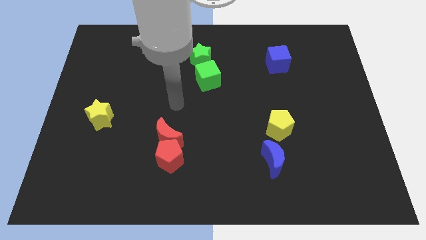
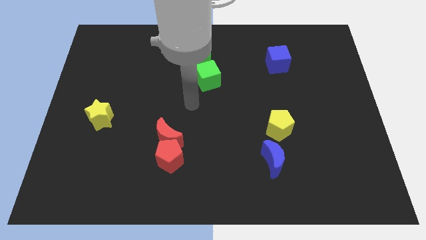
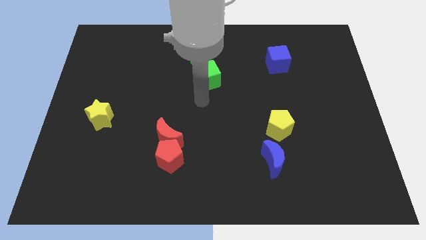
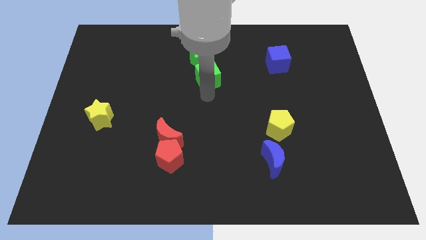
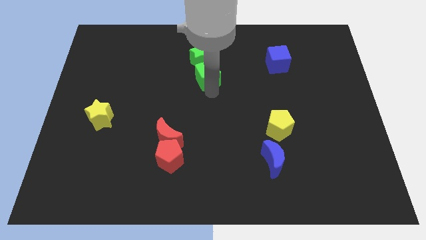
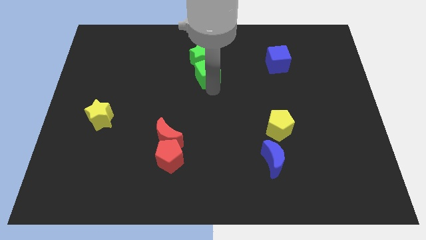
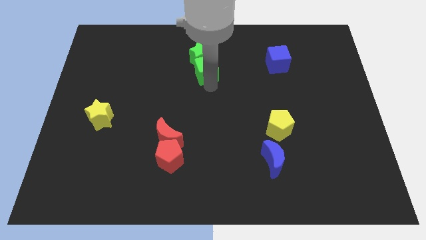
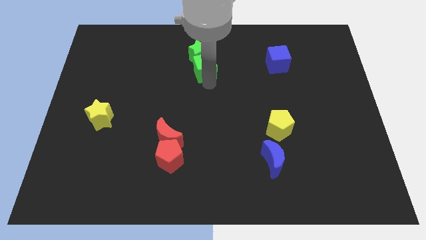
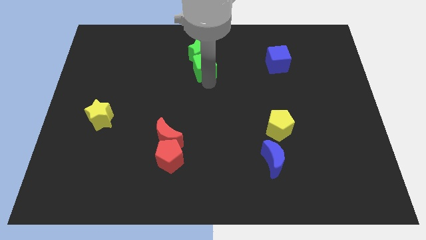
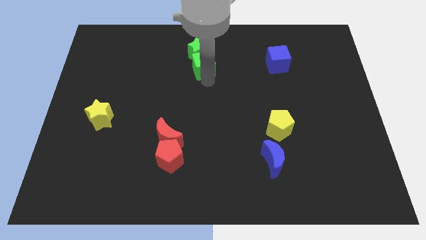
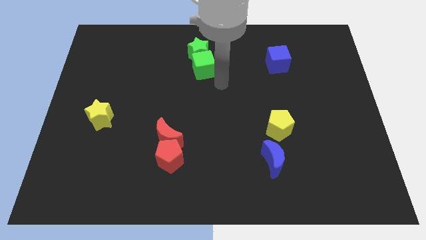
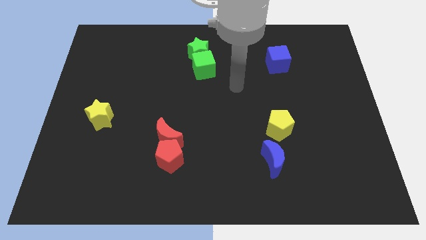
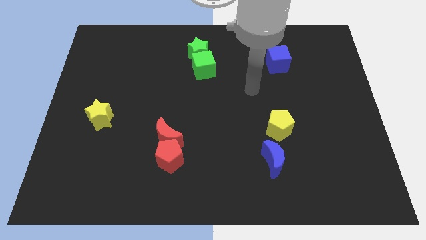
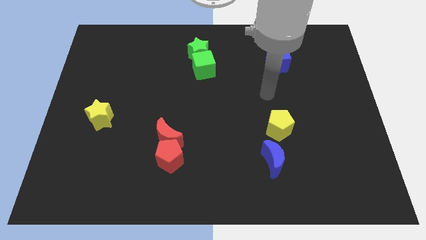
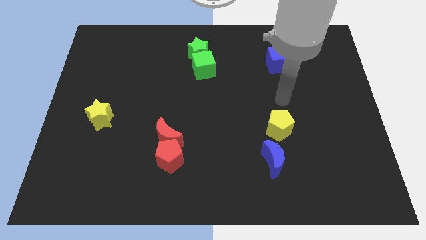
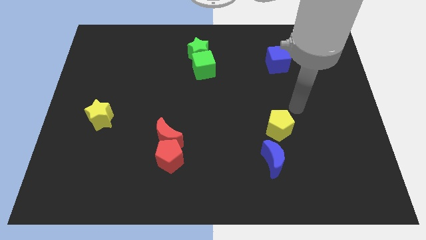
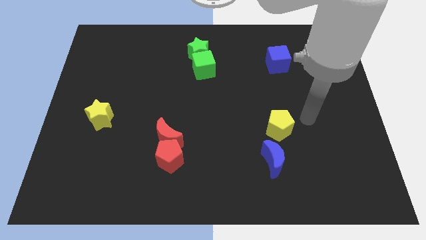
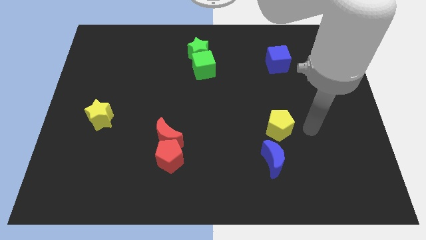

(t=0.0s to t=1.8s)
push the green blocks towards the top side of the board

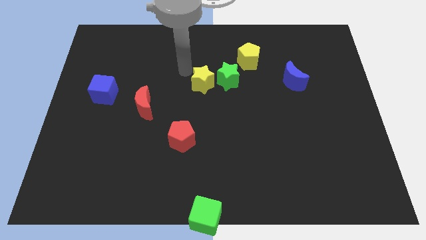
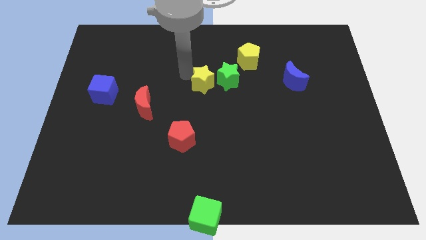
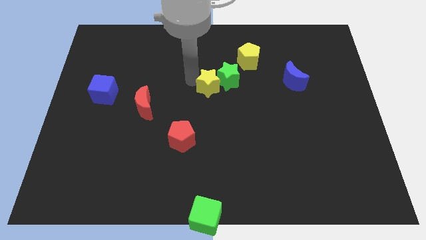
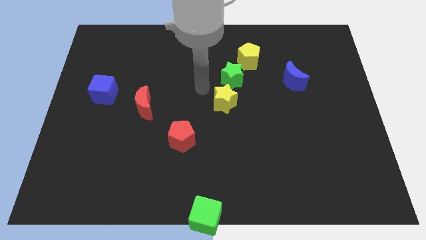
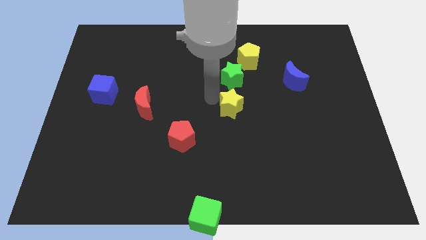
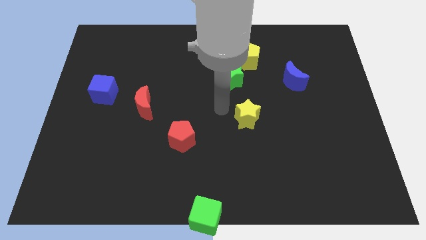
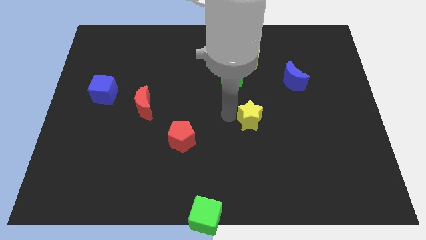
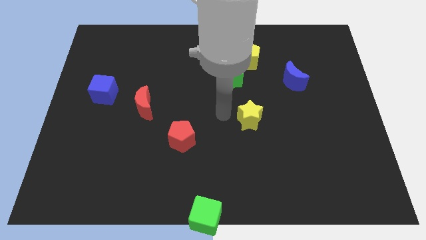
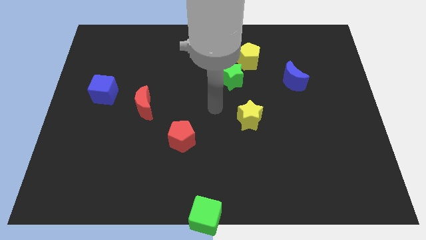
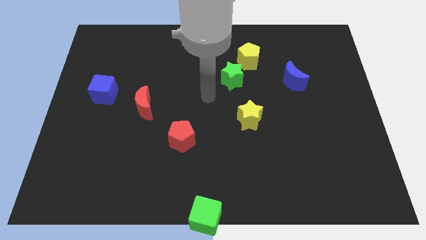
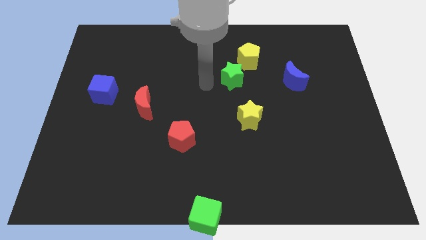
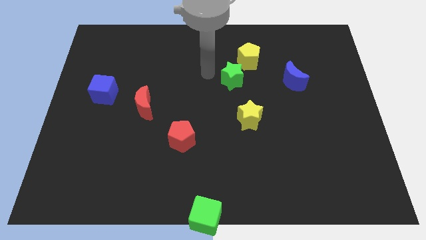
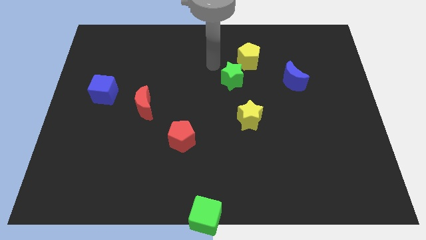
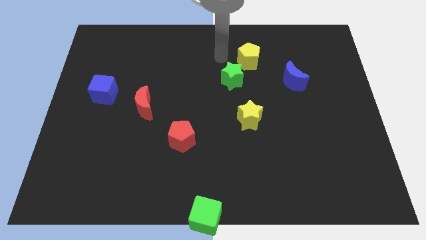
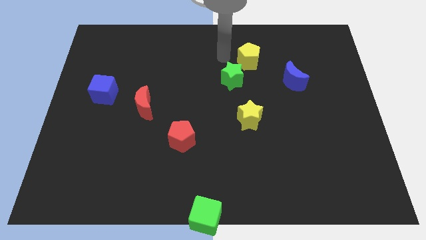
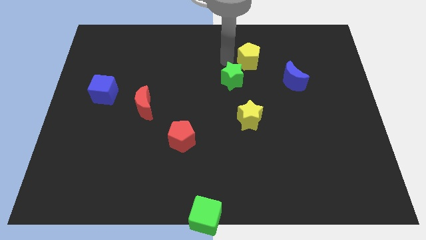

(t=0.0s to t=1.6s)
separate the yellow star and green star

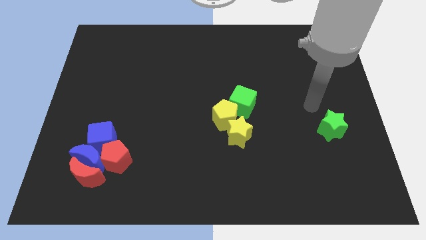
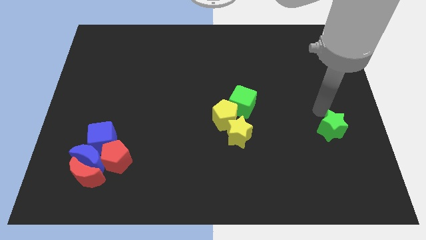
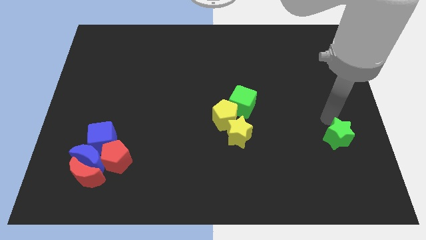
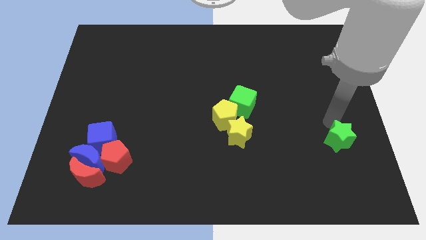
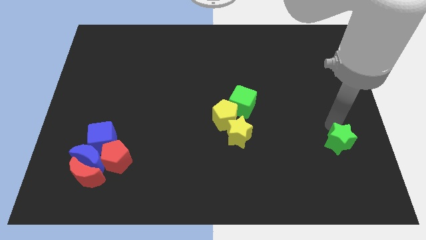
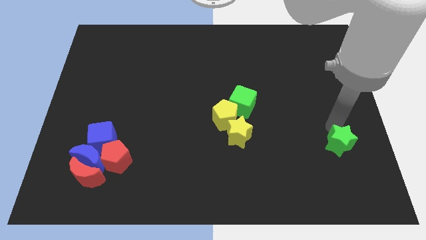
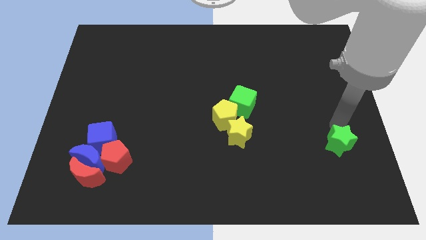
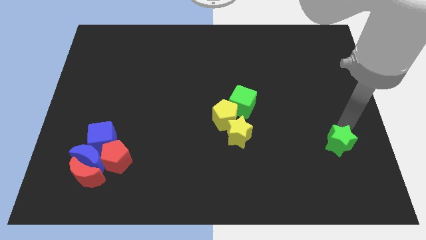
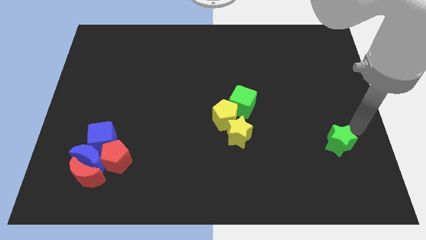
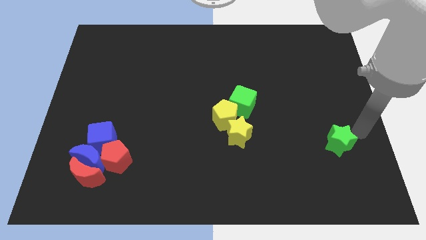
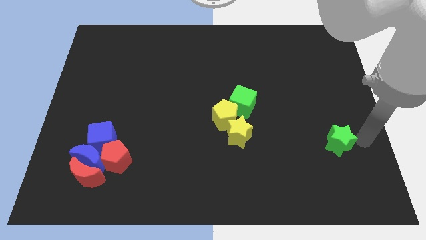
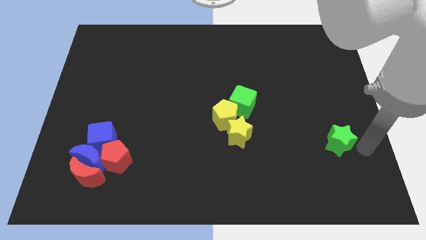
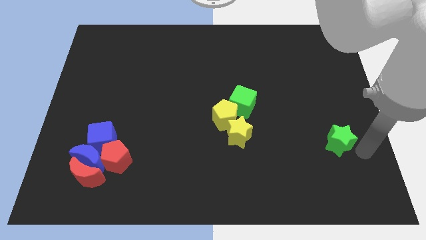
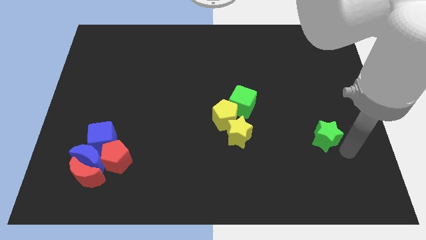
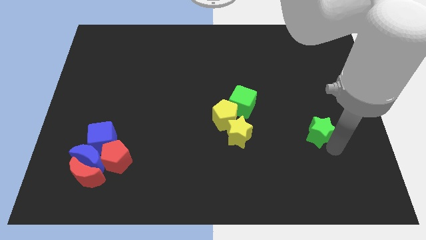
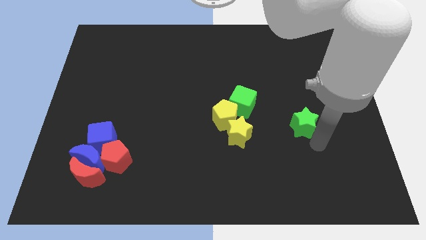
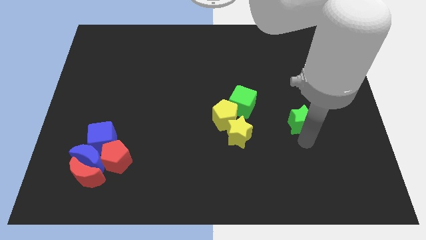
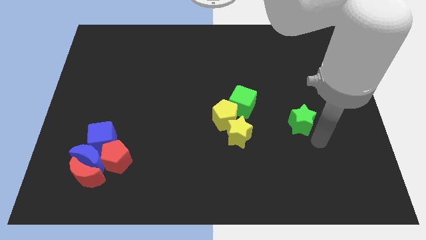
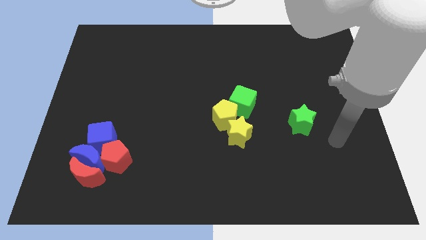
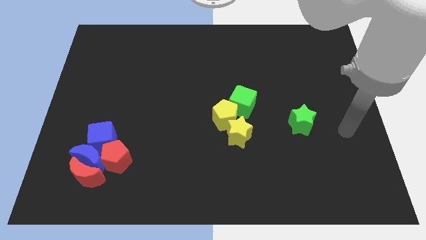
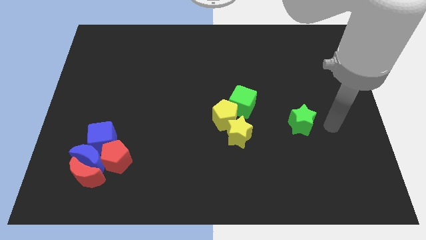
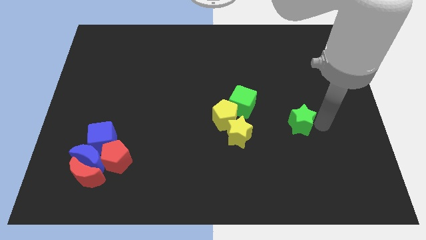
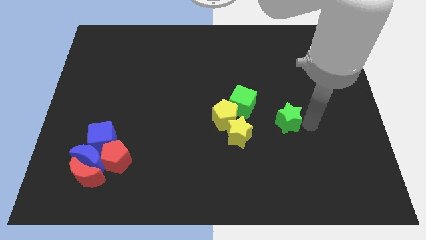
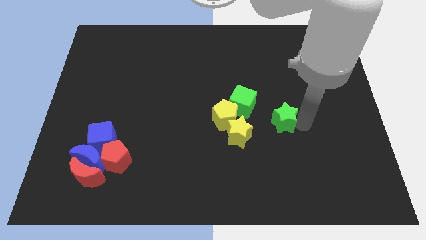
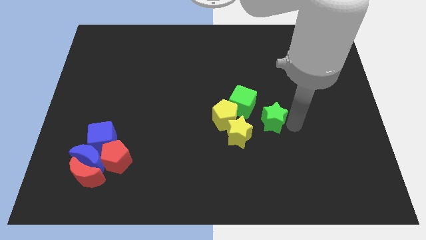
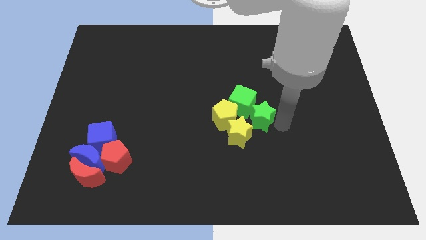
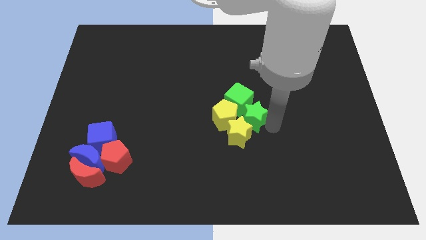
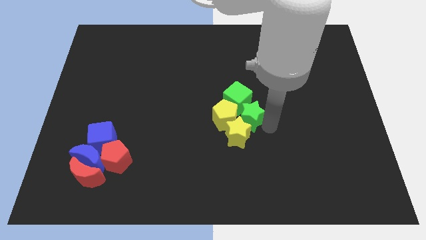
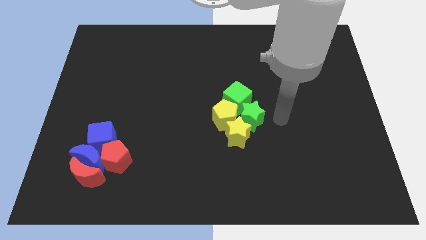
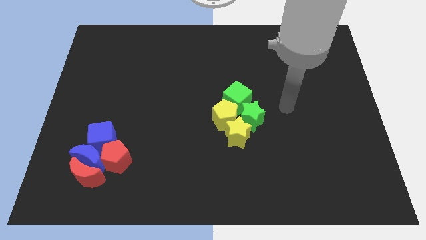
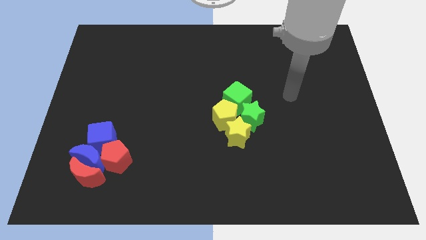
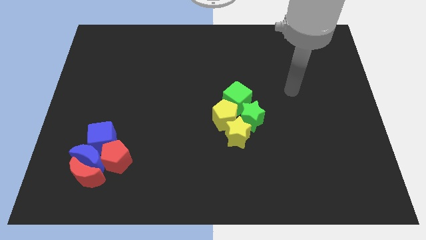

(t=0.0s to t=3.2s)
place green star to the top right of yellow pentagon

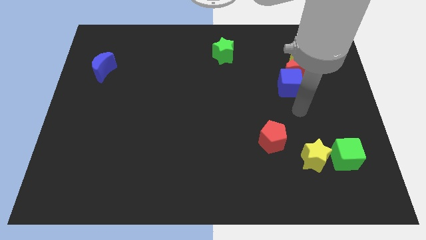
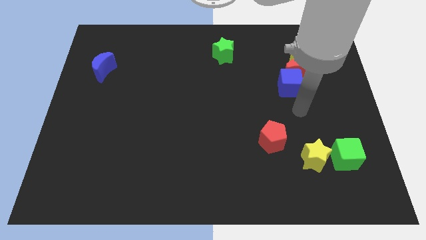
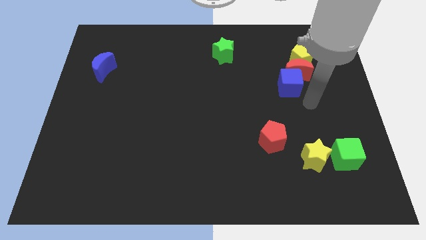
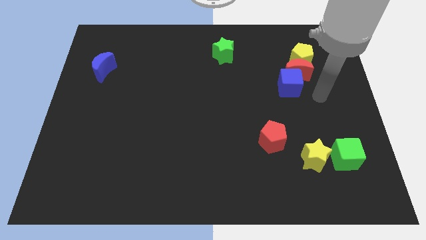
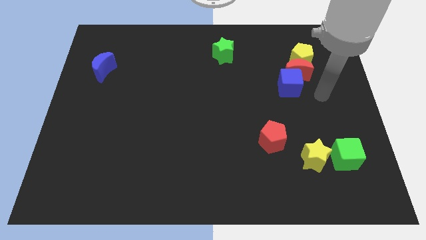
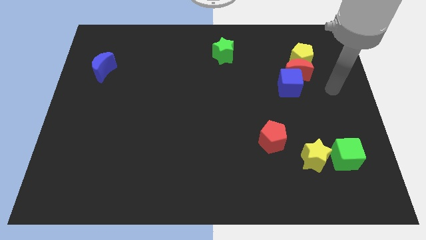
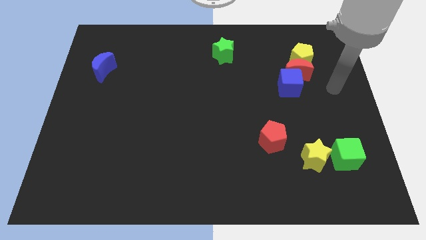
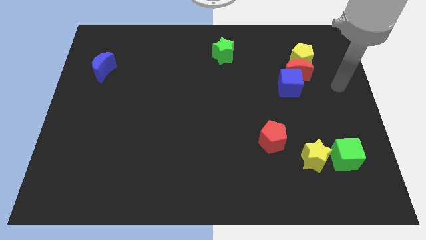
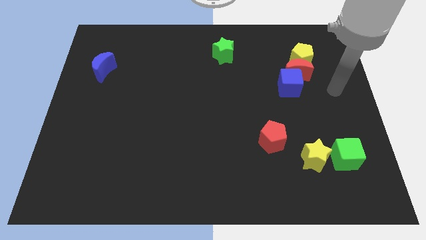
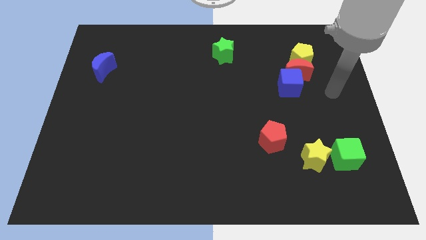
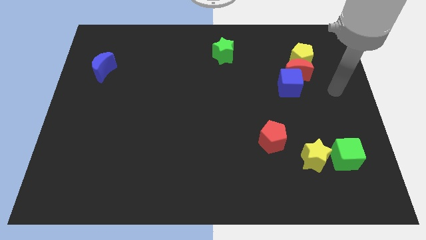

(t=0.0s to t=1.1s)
move your arm towards the right side of the board

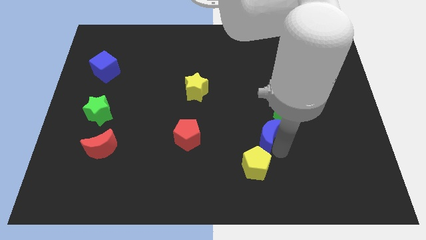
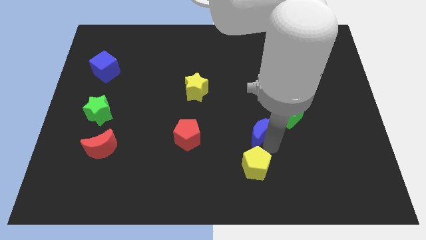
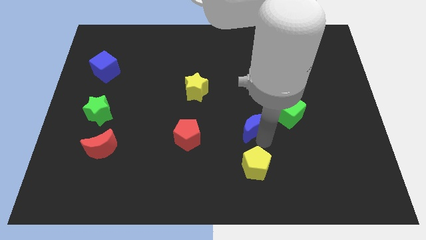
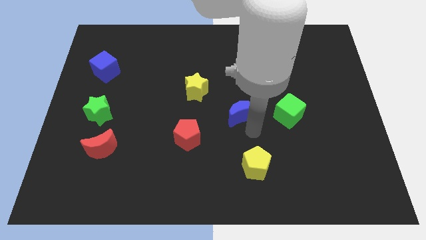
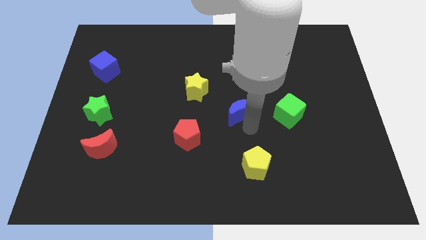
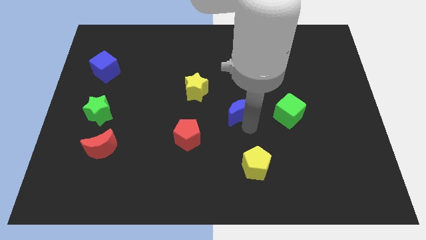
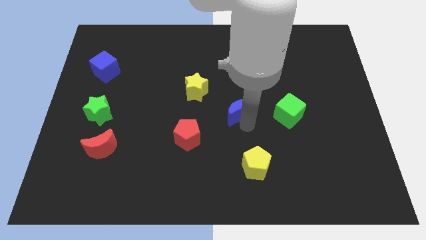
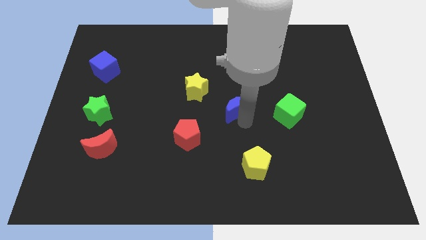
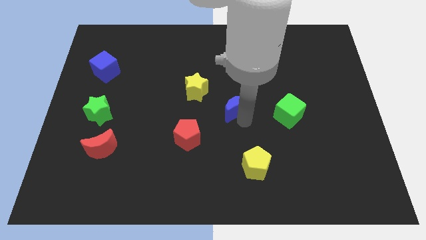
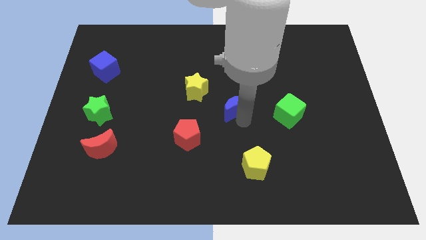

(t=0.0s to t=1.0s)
drag the blue moon diagonally bottom right to the yellow star

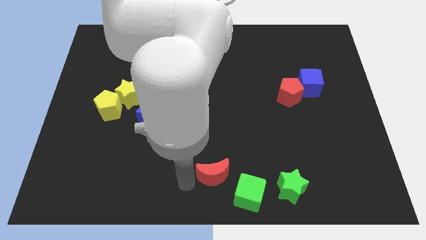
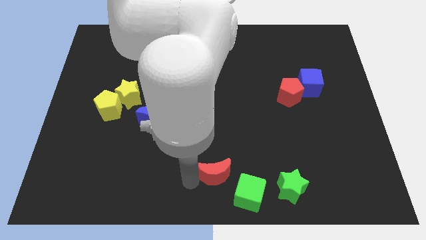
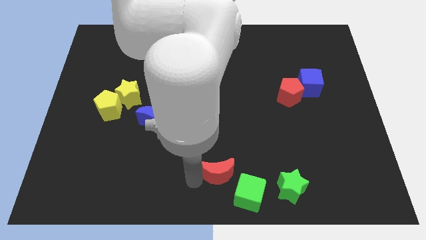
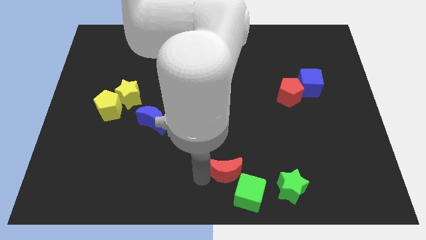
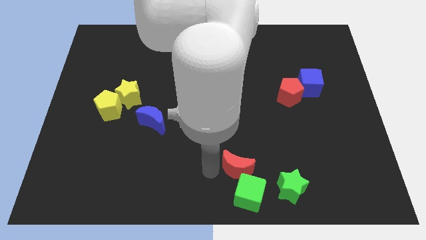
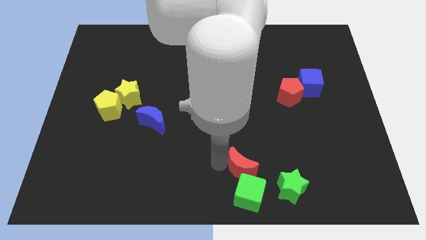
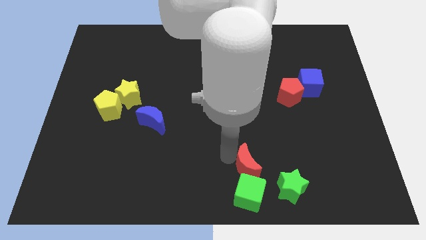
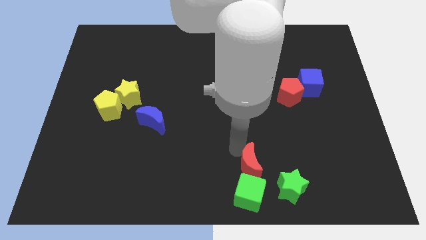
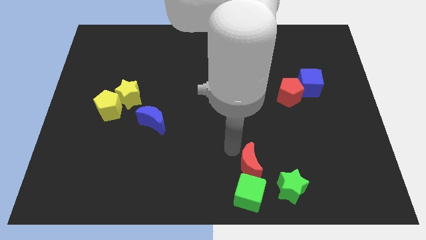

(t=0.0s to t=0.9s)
place the red crescent to top of the green cube
